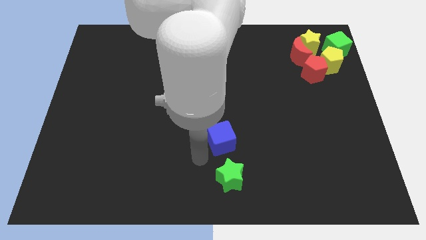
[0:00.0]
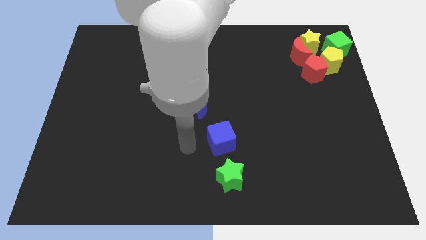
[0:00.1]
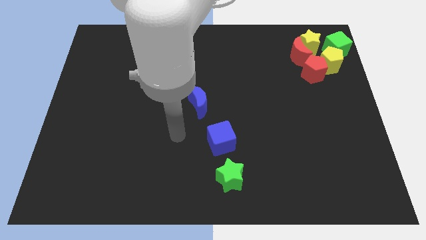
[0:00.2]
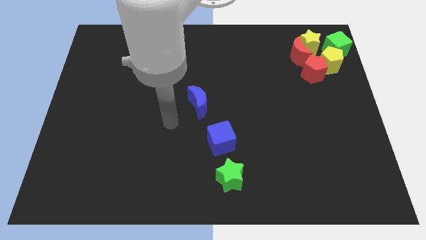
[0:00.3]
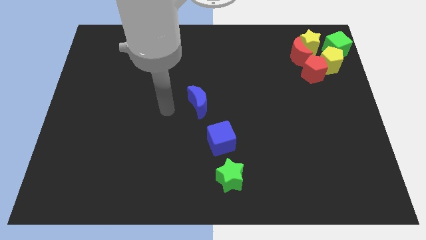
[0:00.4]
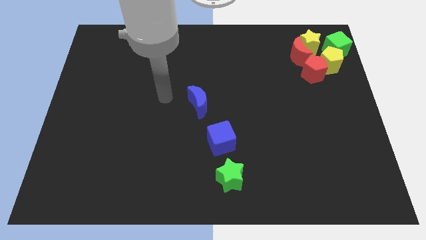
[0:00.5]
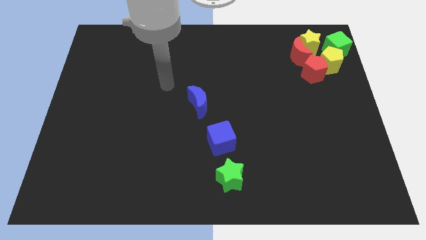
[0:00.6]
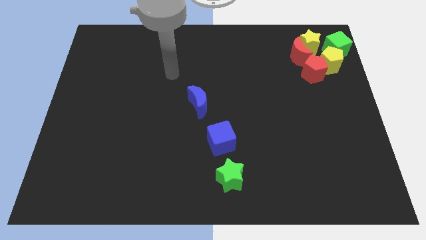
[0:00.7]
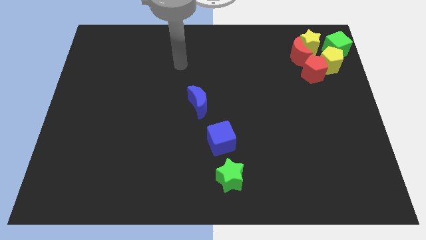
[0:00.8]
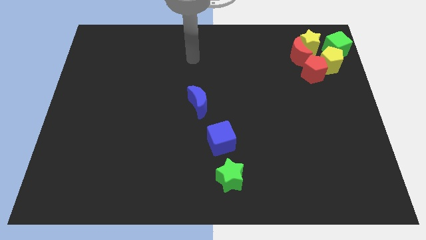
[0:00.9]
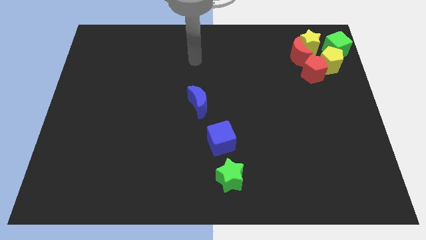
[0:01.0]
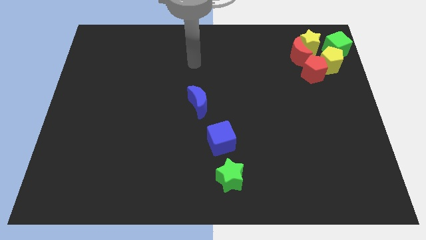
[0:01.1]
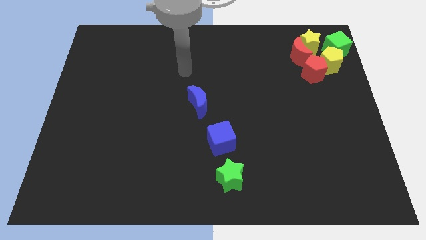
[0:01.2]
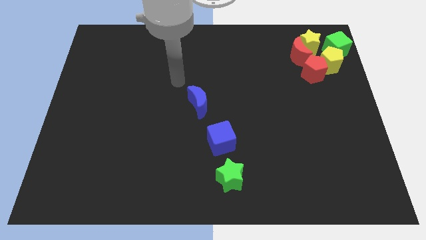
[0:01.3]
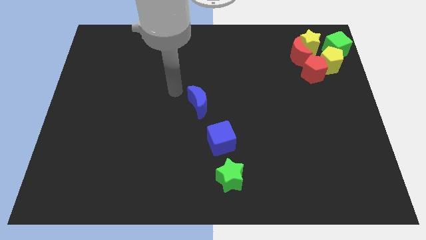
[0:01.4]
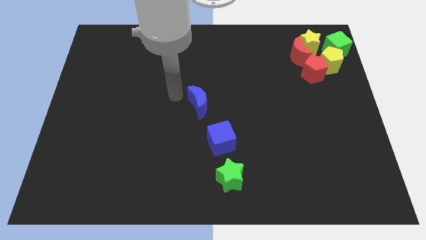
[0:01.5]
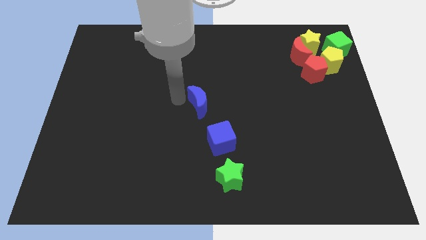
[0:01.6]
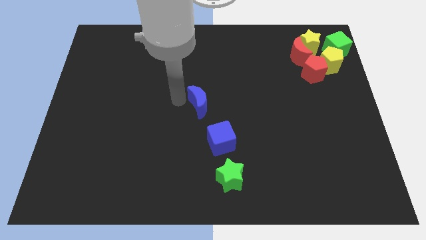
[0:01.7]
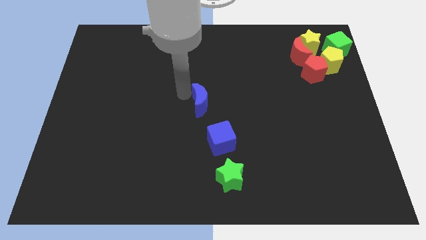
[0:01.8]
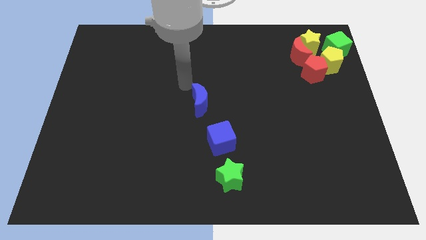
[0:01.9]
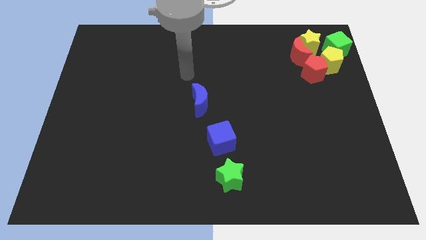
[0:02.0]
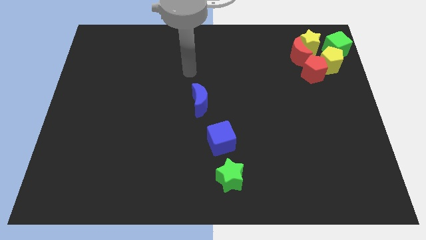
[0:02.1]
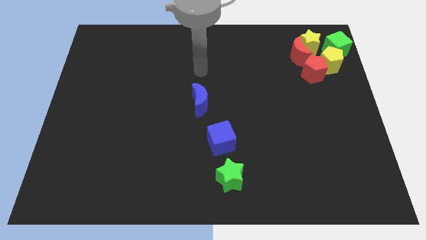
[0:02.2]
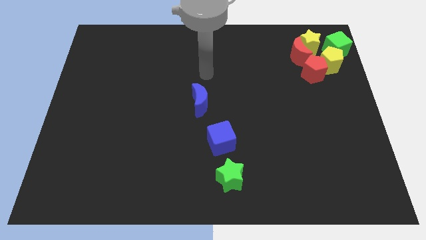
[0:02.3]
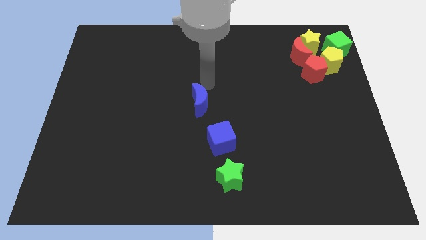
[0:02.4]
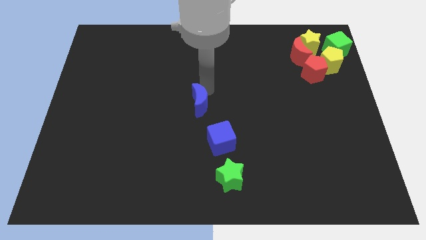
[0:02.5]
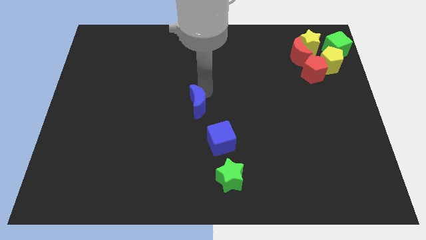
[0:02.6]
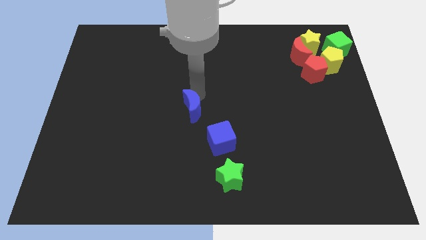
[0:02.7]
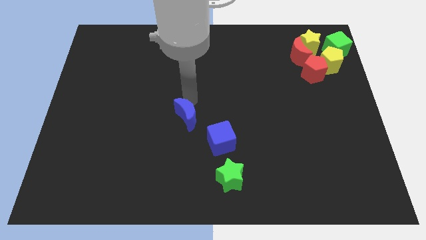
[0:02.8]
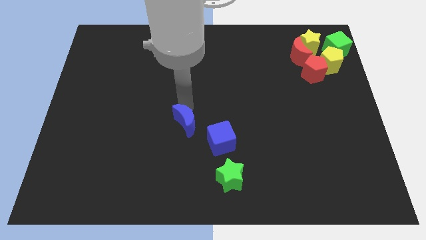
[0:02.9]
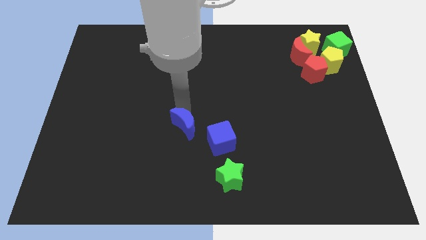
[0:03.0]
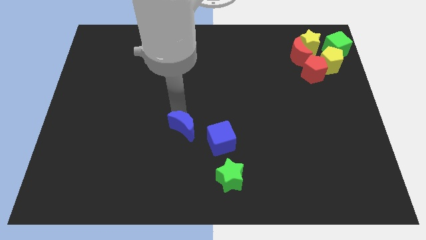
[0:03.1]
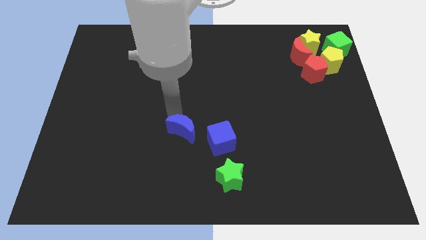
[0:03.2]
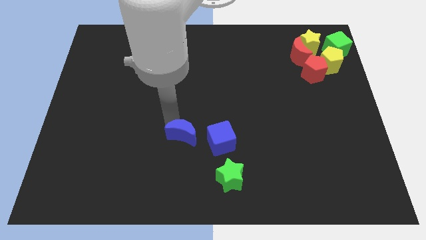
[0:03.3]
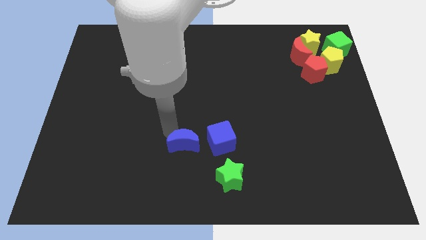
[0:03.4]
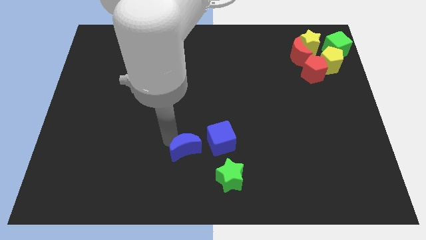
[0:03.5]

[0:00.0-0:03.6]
place the blue moon parallel left to the blue cube

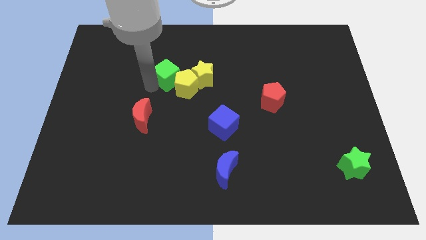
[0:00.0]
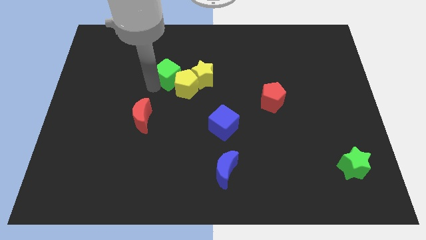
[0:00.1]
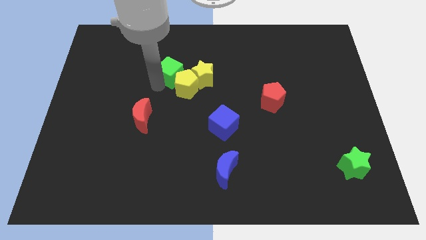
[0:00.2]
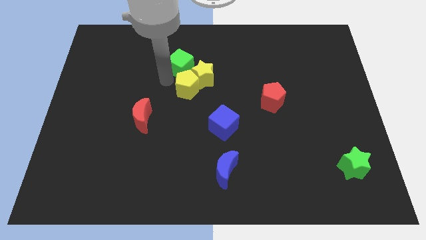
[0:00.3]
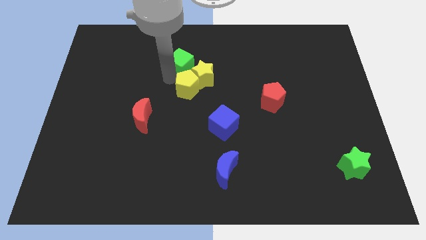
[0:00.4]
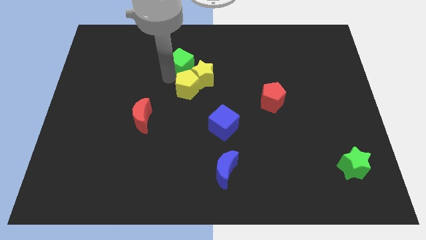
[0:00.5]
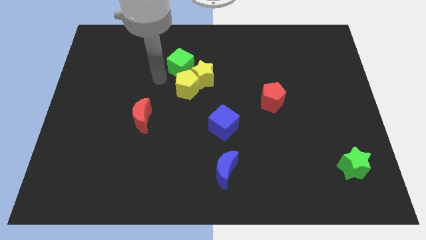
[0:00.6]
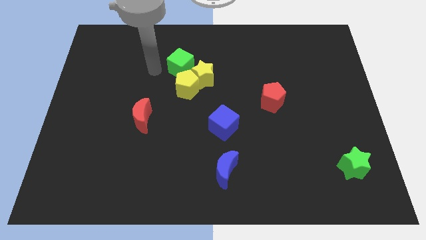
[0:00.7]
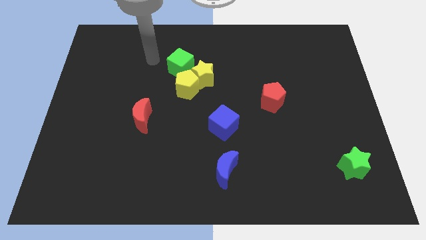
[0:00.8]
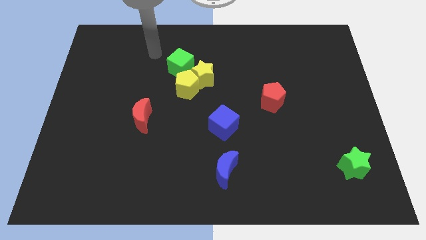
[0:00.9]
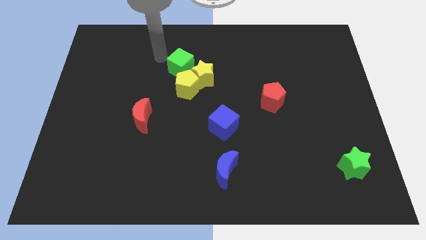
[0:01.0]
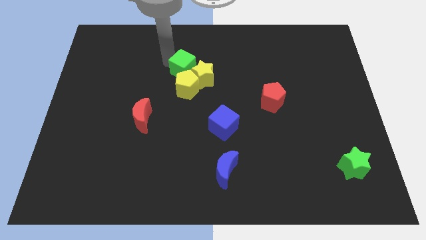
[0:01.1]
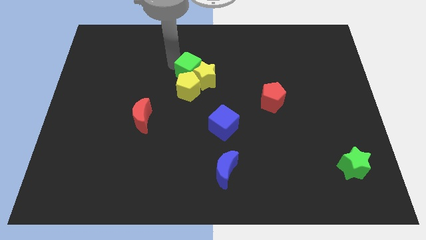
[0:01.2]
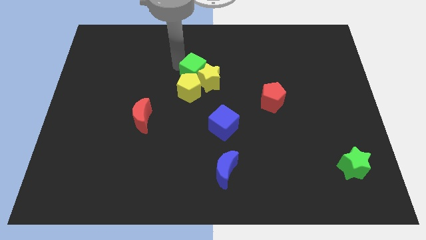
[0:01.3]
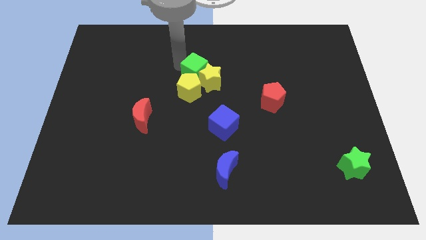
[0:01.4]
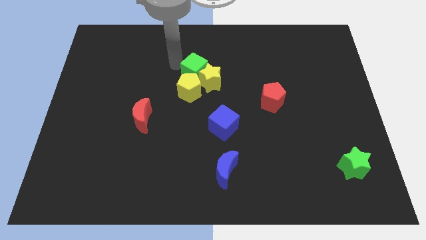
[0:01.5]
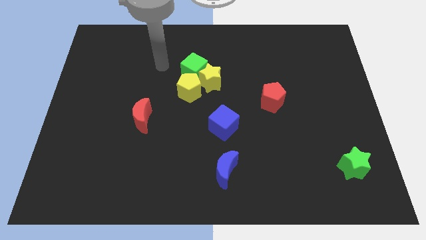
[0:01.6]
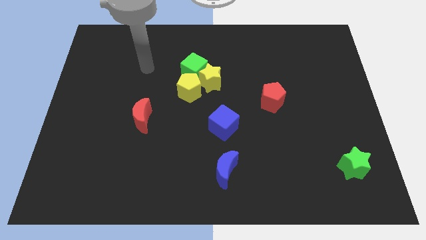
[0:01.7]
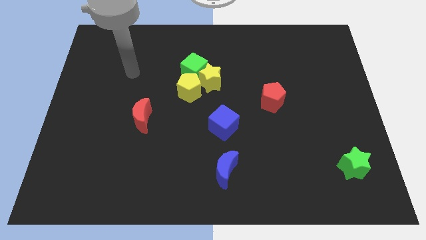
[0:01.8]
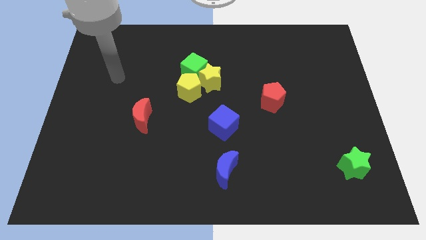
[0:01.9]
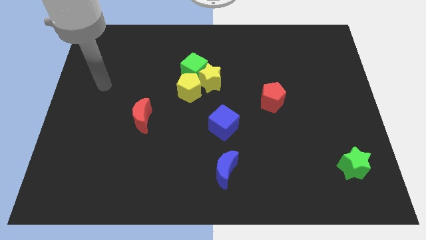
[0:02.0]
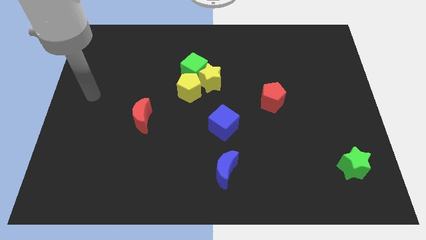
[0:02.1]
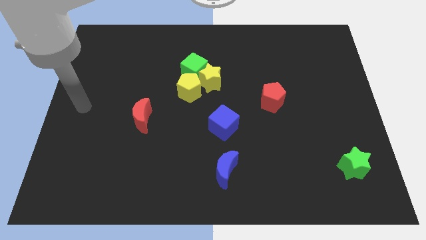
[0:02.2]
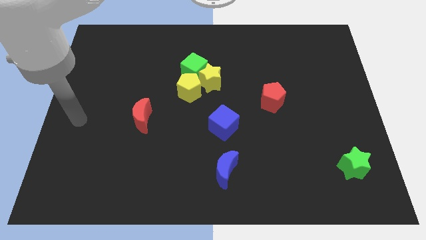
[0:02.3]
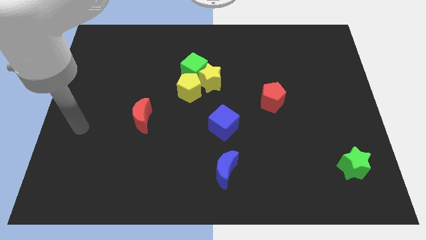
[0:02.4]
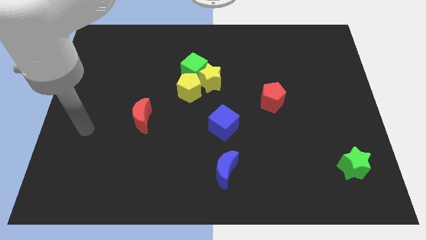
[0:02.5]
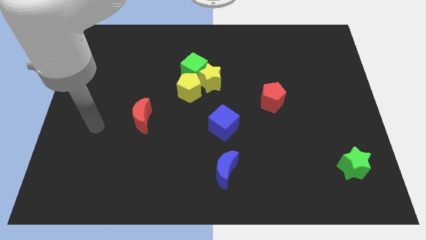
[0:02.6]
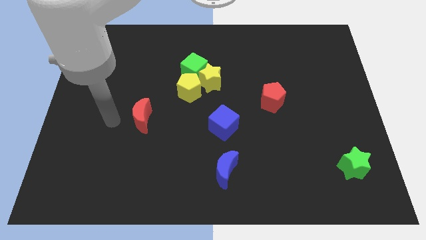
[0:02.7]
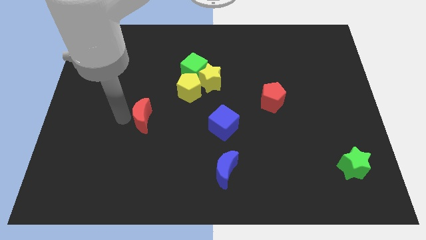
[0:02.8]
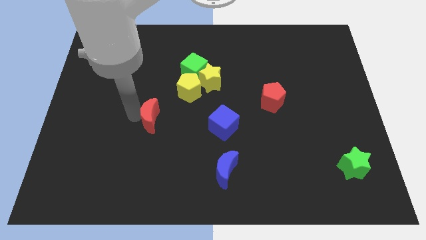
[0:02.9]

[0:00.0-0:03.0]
move the green cube into the top side of the yellow star

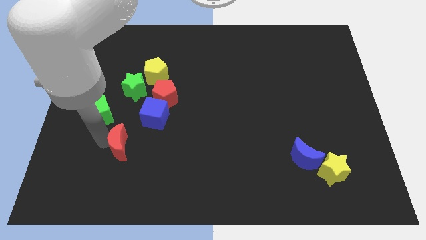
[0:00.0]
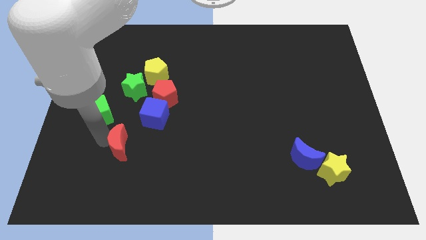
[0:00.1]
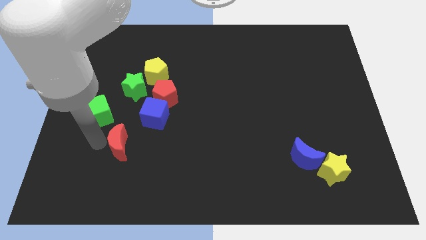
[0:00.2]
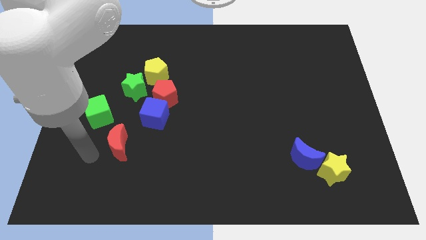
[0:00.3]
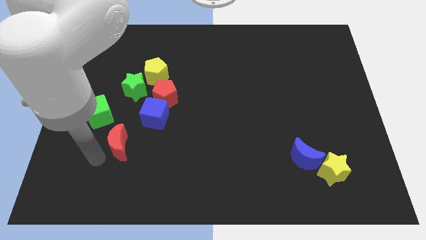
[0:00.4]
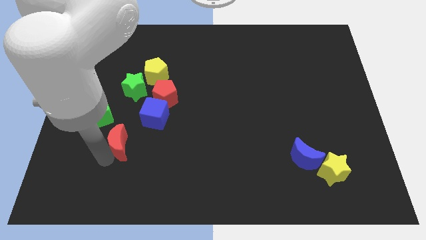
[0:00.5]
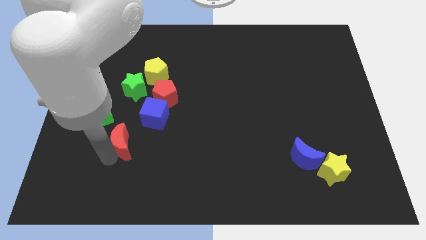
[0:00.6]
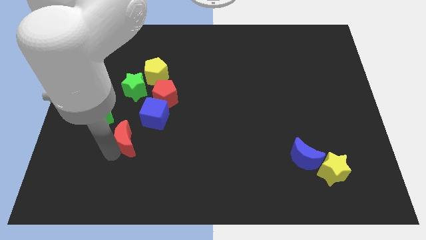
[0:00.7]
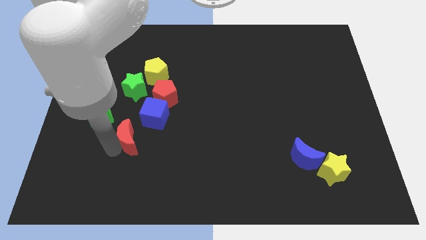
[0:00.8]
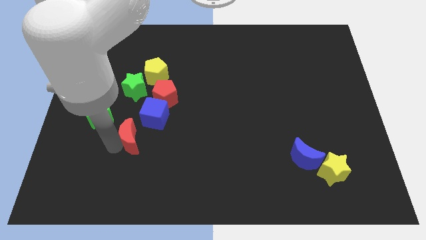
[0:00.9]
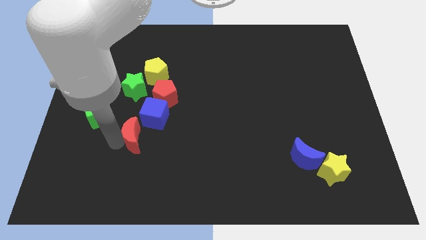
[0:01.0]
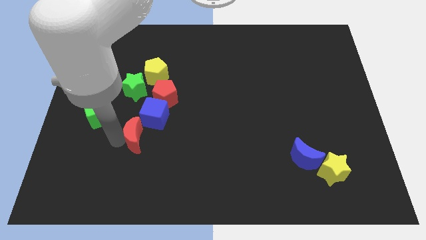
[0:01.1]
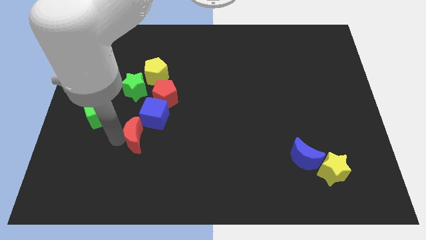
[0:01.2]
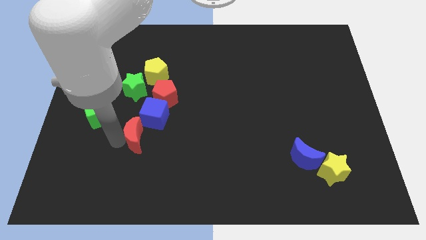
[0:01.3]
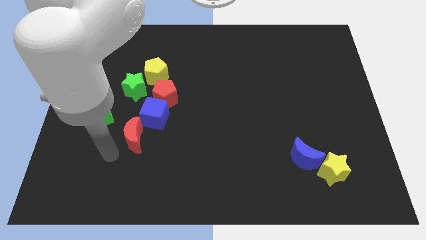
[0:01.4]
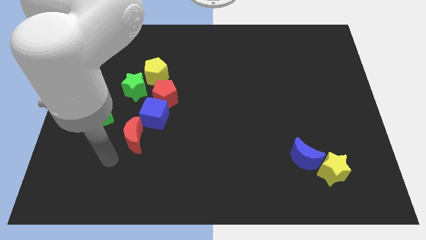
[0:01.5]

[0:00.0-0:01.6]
push the red crescent into the bottom side of the blue cube

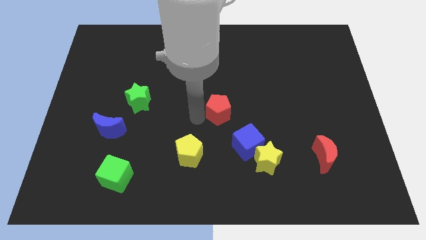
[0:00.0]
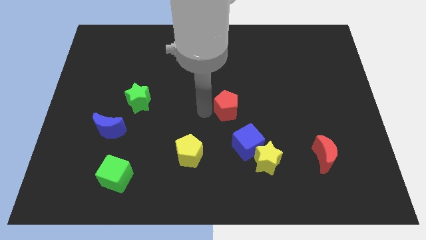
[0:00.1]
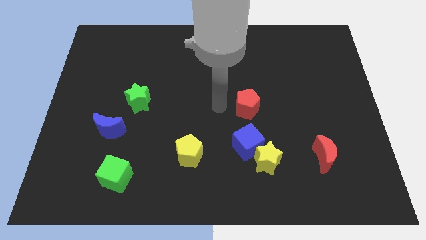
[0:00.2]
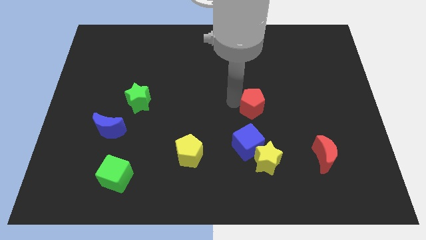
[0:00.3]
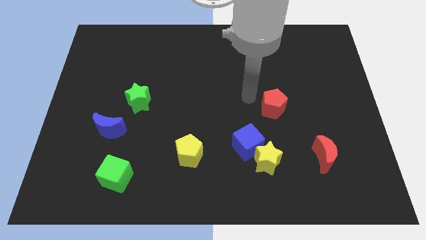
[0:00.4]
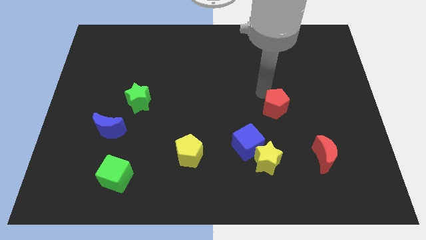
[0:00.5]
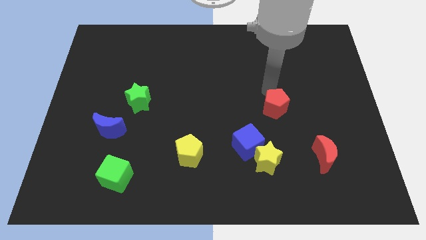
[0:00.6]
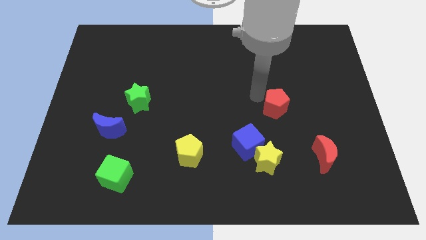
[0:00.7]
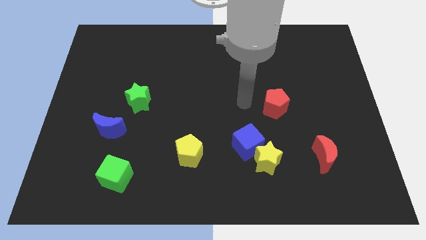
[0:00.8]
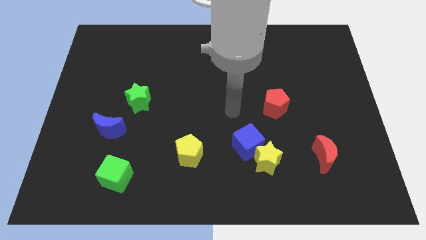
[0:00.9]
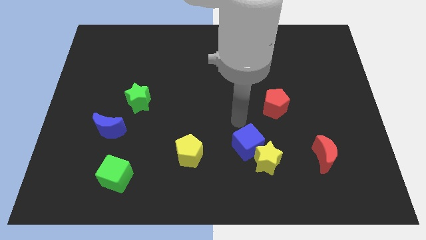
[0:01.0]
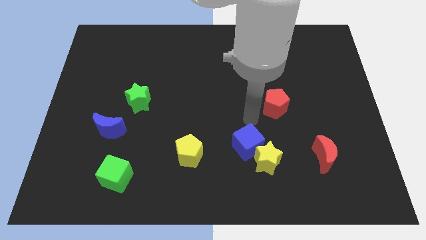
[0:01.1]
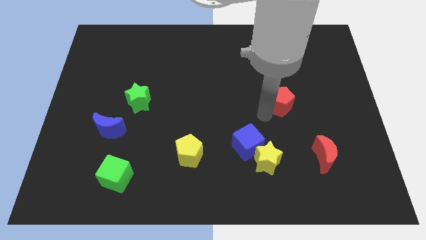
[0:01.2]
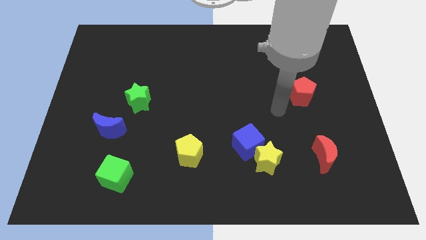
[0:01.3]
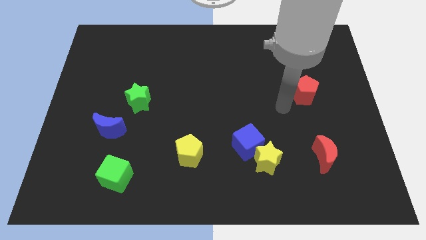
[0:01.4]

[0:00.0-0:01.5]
move the red pentagon to the top of the red crescent
